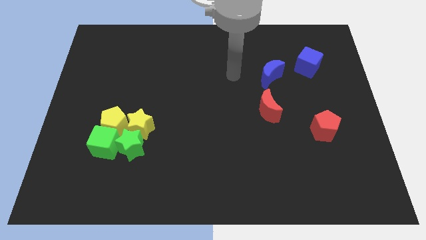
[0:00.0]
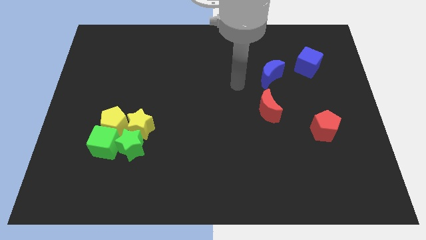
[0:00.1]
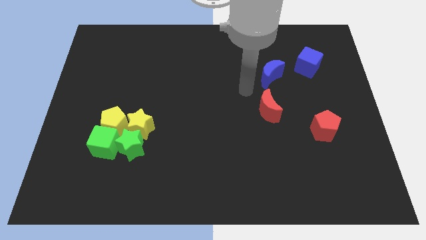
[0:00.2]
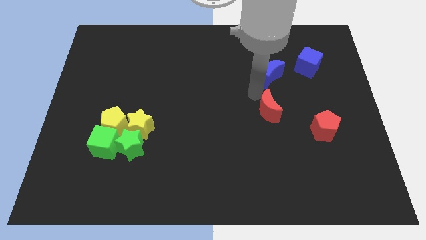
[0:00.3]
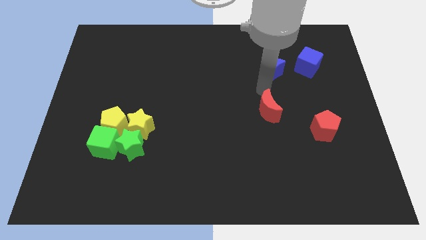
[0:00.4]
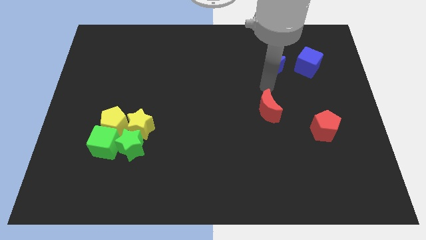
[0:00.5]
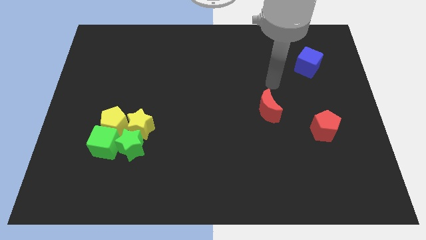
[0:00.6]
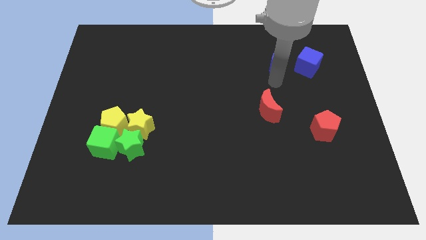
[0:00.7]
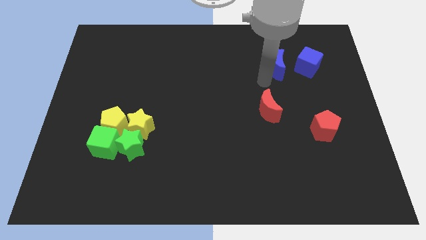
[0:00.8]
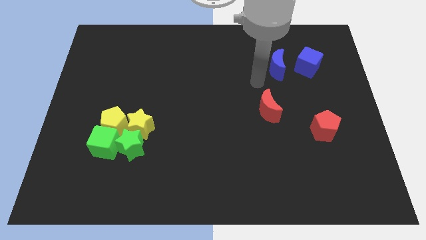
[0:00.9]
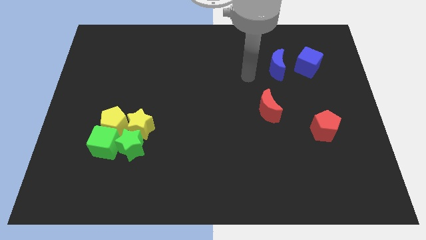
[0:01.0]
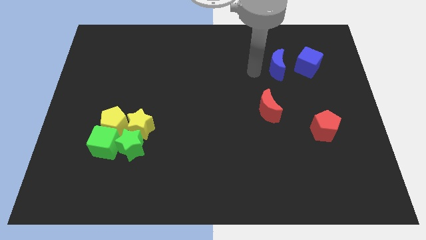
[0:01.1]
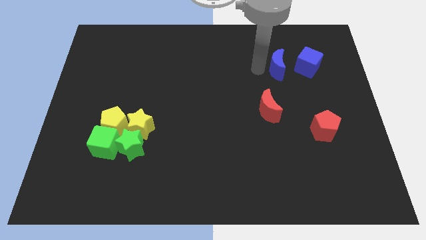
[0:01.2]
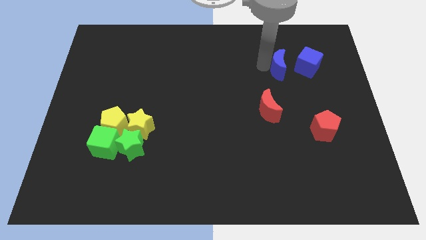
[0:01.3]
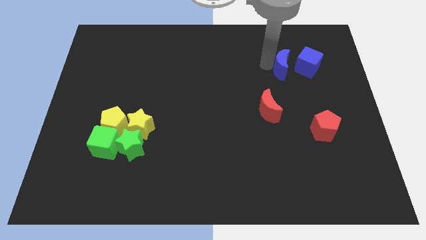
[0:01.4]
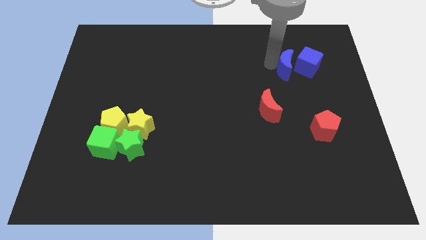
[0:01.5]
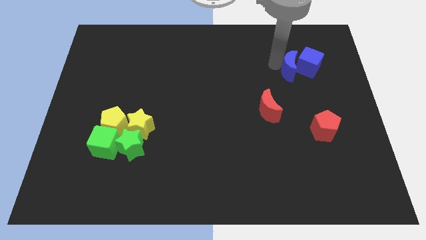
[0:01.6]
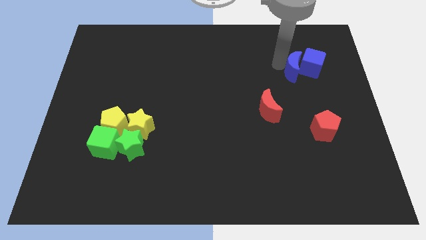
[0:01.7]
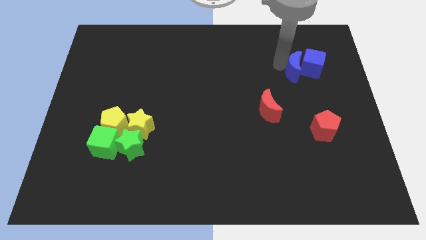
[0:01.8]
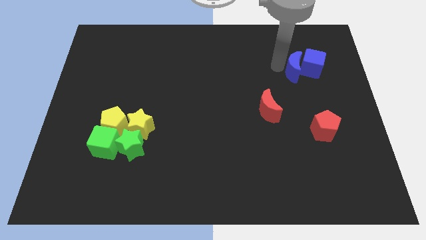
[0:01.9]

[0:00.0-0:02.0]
place the blue moon left to the blue cube

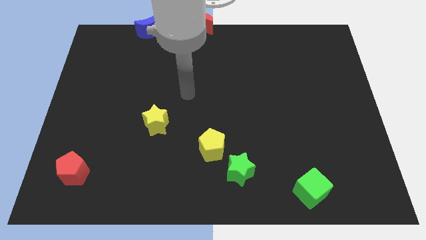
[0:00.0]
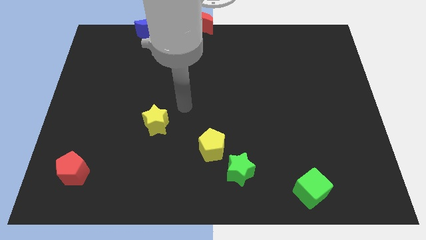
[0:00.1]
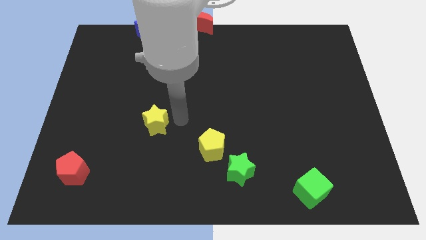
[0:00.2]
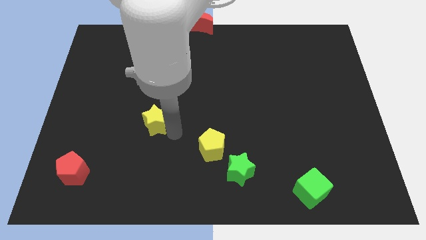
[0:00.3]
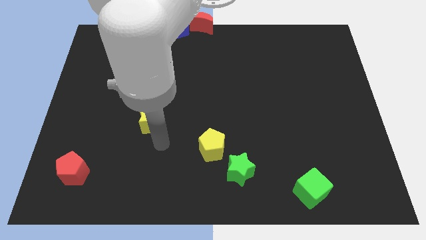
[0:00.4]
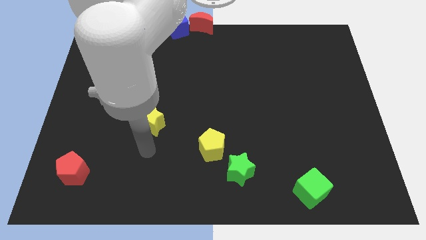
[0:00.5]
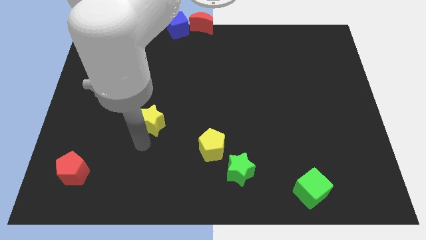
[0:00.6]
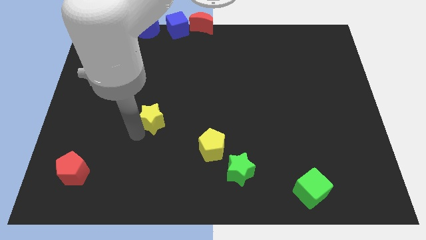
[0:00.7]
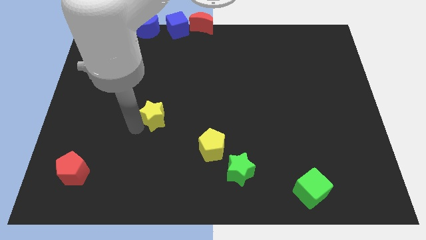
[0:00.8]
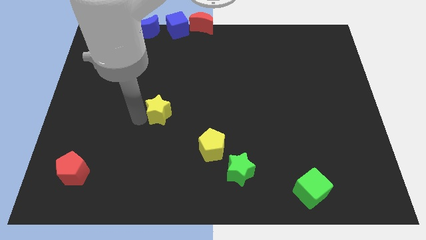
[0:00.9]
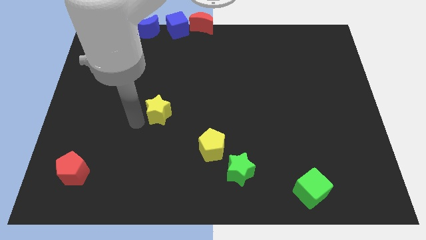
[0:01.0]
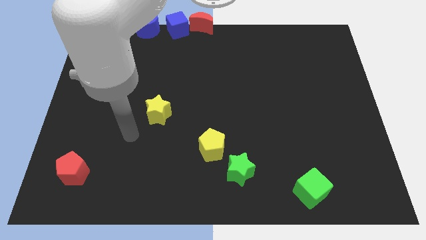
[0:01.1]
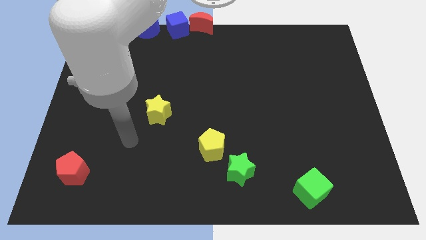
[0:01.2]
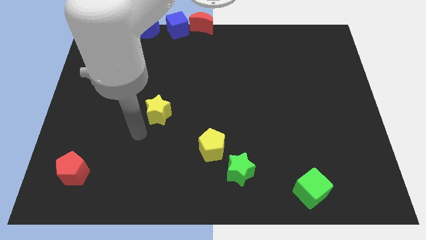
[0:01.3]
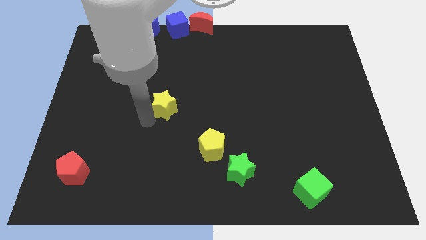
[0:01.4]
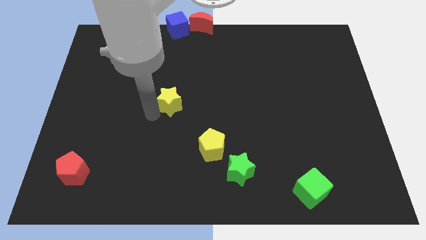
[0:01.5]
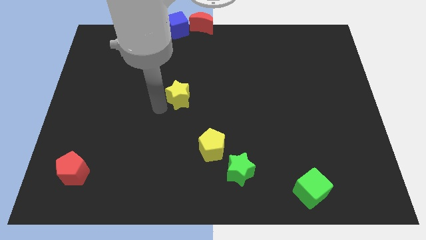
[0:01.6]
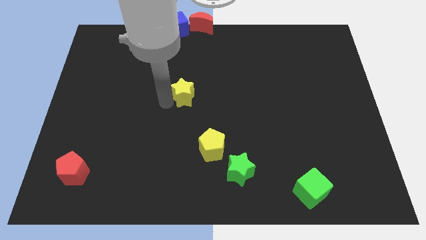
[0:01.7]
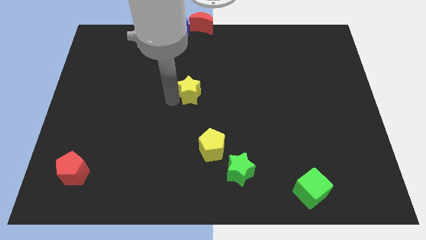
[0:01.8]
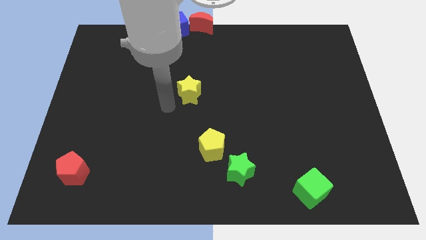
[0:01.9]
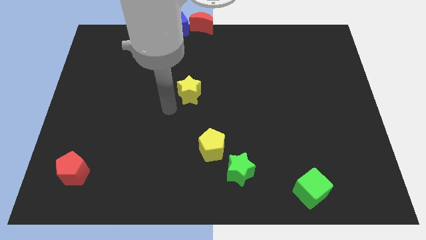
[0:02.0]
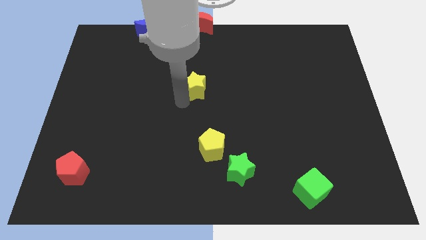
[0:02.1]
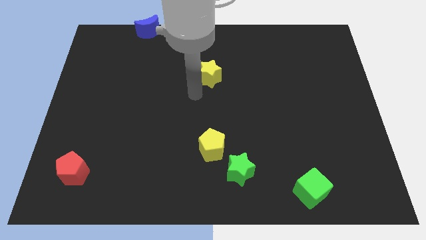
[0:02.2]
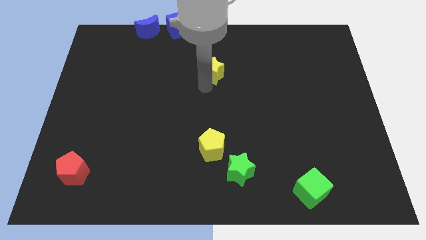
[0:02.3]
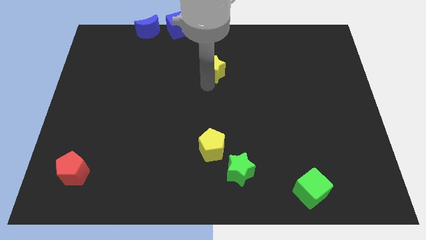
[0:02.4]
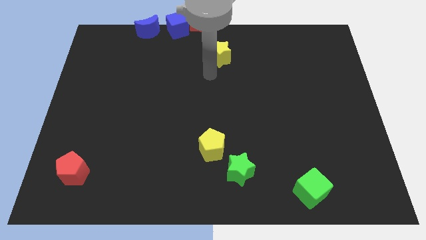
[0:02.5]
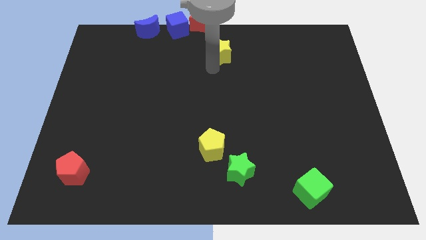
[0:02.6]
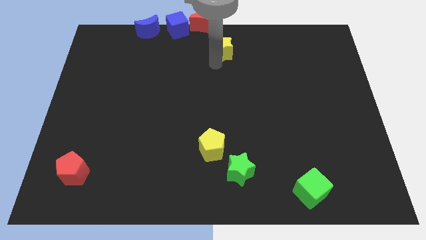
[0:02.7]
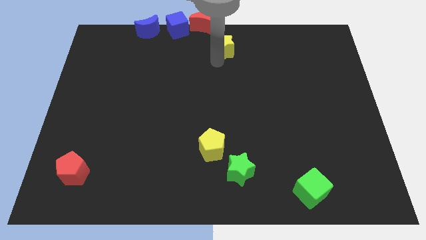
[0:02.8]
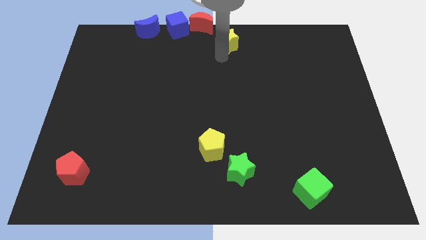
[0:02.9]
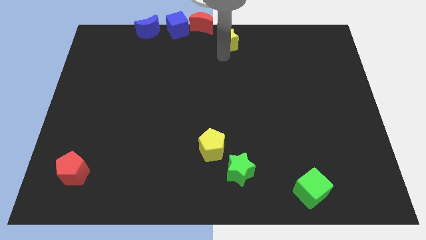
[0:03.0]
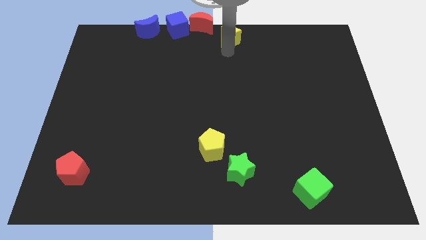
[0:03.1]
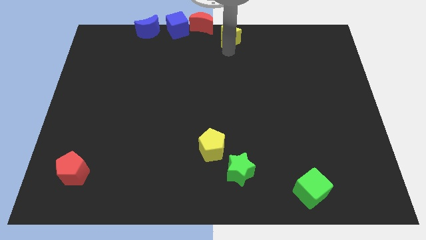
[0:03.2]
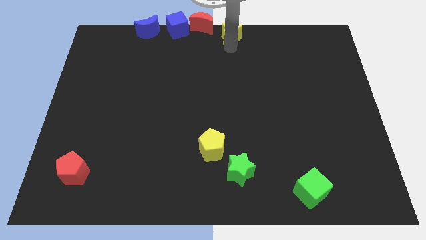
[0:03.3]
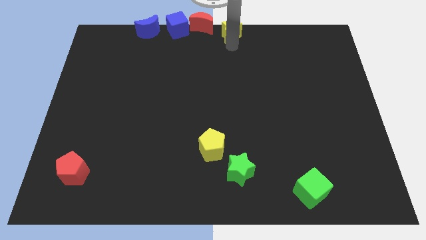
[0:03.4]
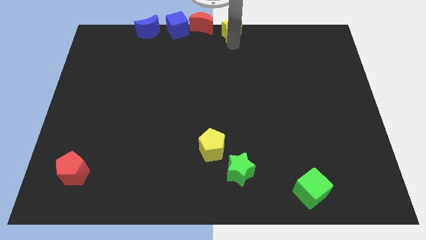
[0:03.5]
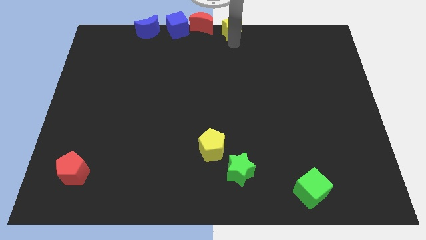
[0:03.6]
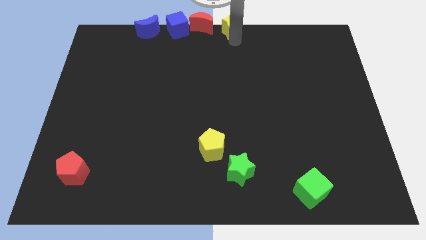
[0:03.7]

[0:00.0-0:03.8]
place the yellow star to the right of the red crescent

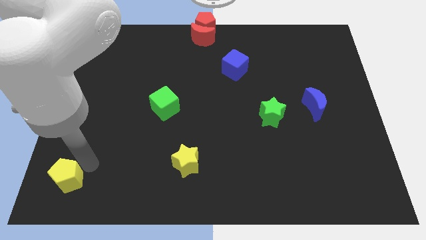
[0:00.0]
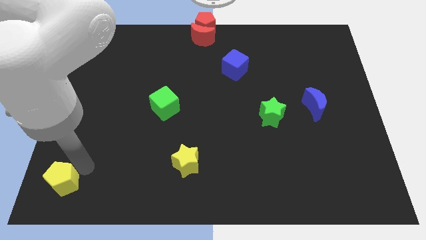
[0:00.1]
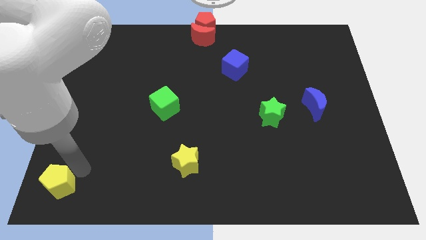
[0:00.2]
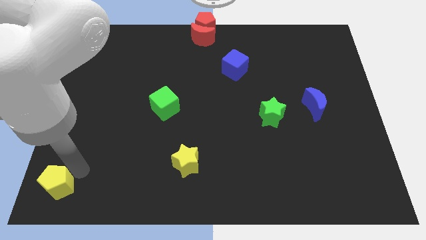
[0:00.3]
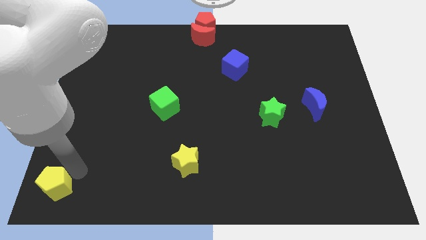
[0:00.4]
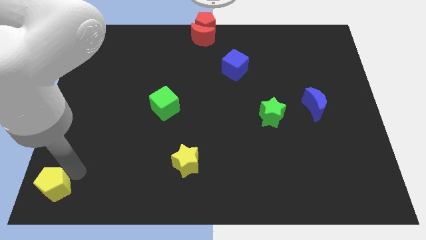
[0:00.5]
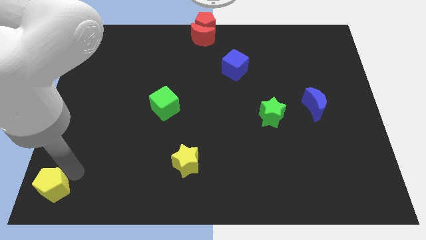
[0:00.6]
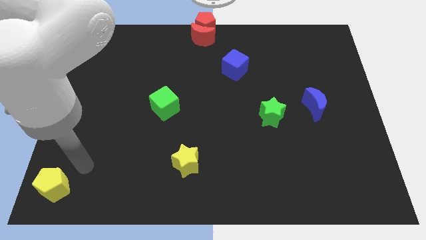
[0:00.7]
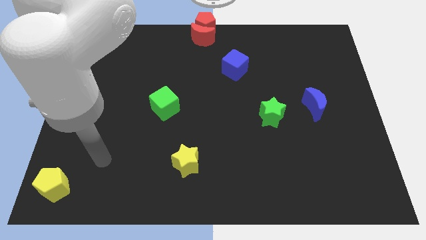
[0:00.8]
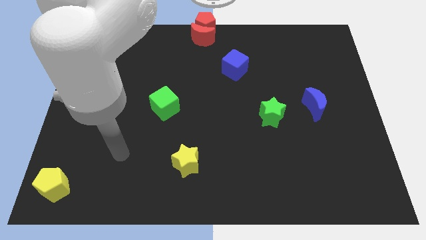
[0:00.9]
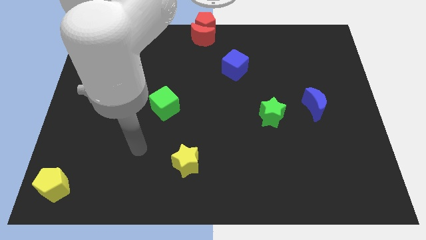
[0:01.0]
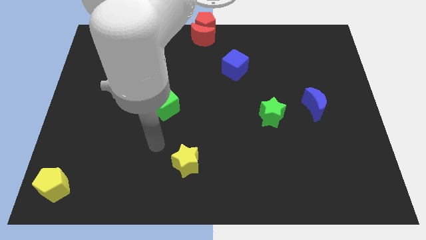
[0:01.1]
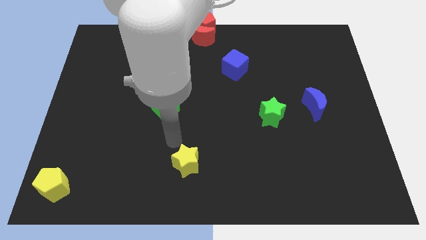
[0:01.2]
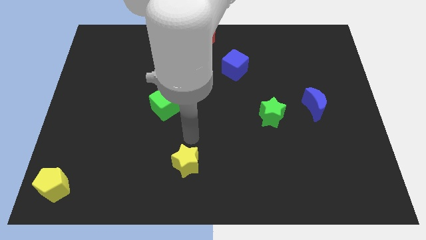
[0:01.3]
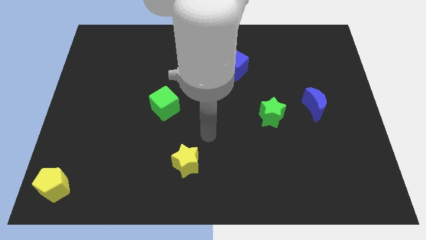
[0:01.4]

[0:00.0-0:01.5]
move the arm to the top of the yellow star

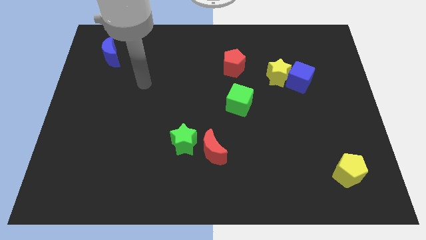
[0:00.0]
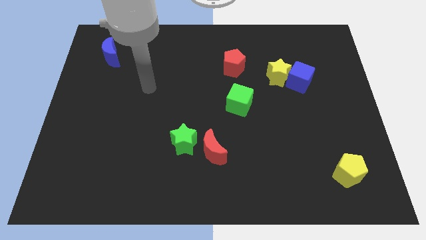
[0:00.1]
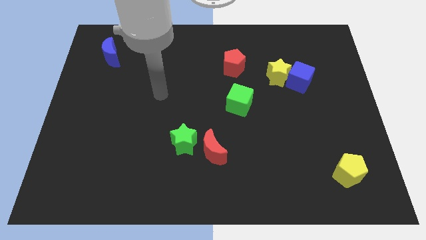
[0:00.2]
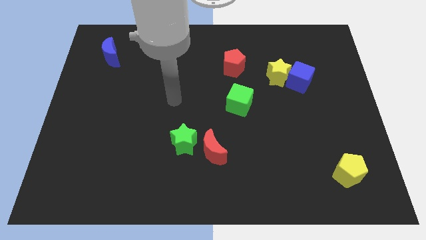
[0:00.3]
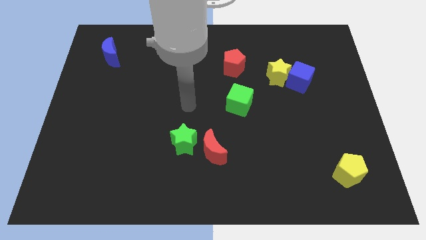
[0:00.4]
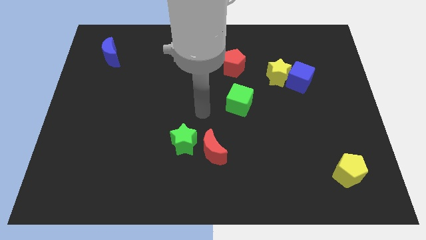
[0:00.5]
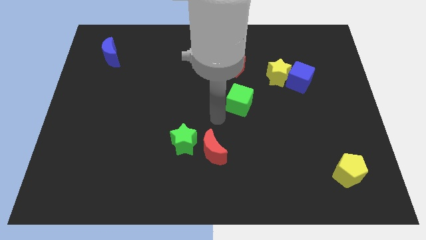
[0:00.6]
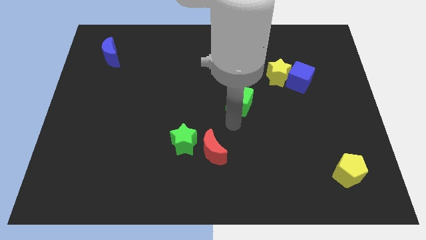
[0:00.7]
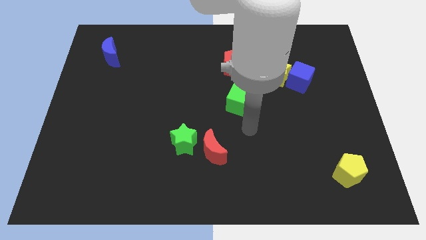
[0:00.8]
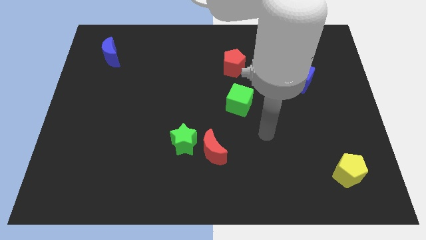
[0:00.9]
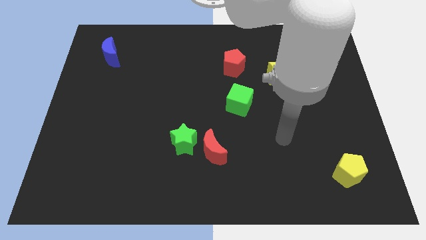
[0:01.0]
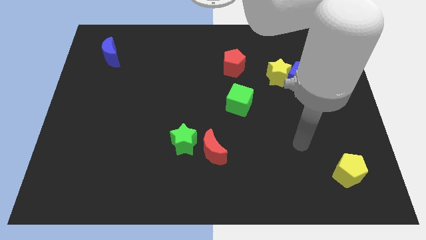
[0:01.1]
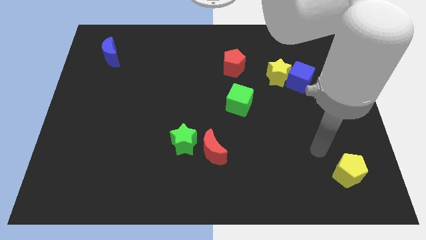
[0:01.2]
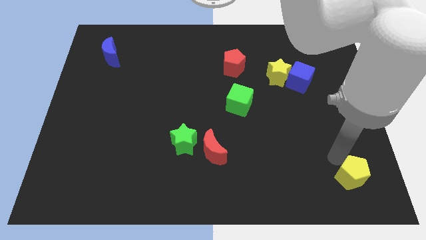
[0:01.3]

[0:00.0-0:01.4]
point the arm to the top left of the yellow pentagon

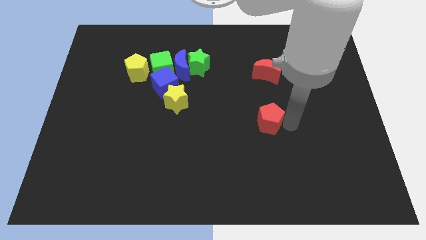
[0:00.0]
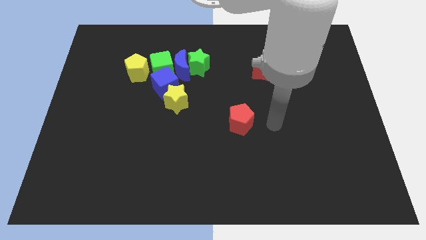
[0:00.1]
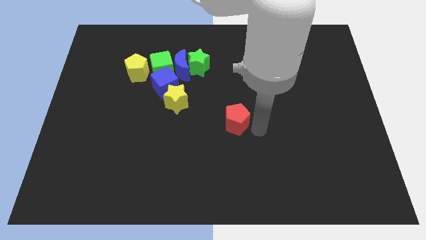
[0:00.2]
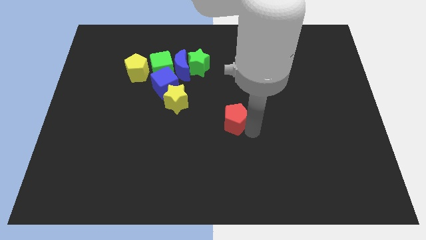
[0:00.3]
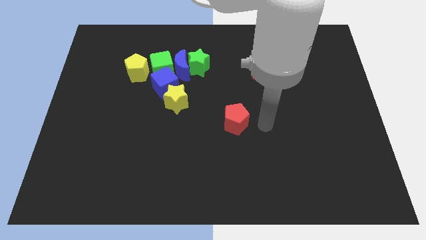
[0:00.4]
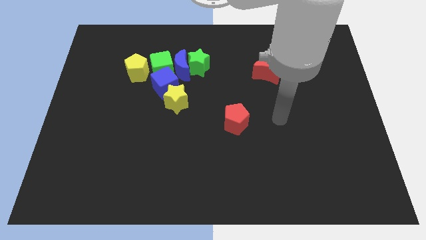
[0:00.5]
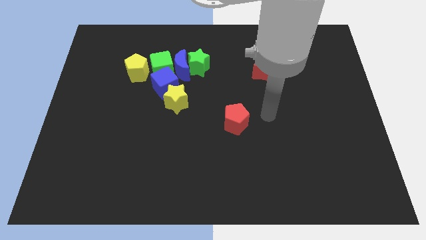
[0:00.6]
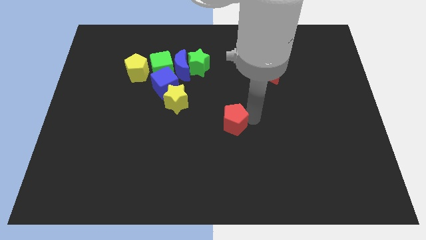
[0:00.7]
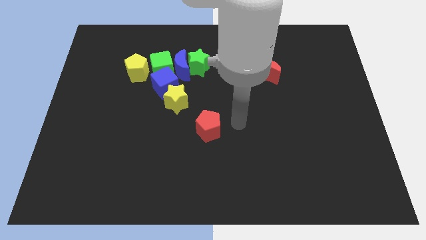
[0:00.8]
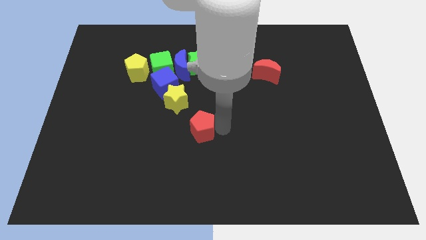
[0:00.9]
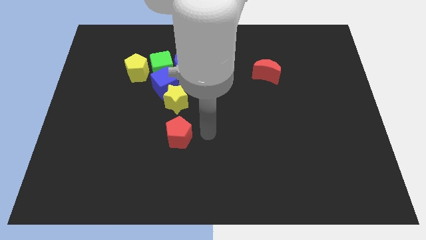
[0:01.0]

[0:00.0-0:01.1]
push the red pentagon to the bottom of the yellow star
